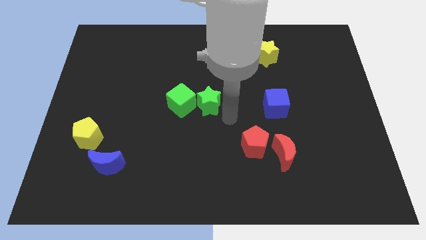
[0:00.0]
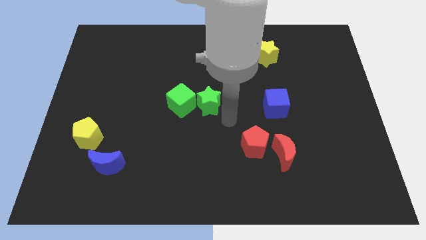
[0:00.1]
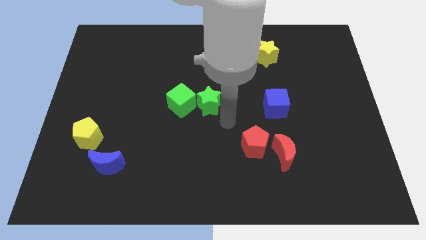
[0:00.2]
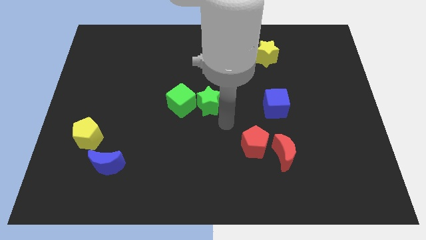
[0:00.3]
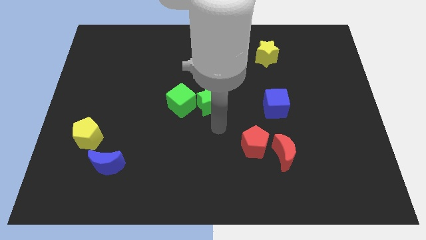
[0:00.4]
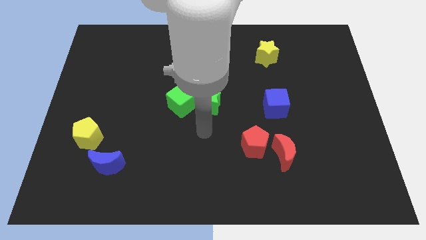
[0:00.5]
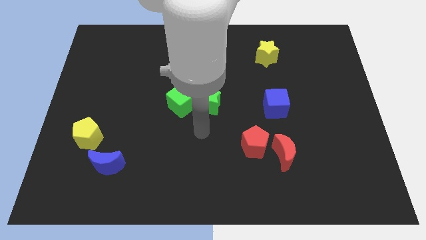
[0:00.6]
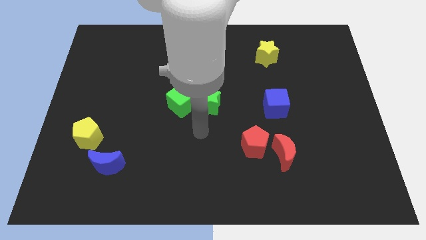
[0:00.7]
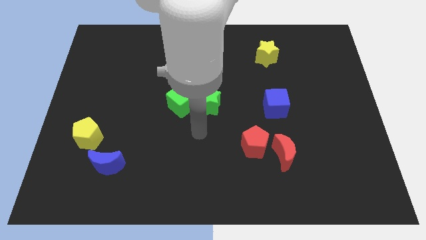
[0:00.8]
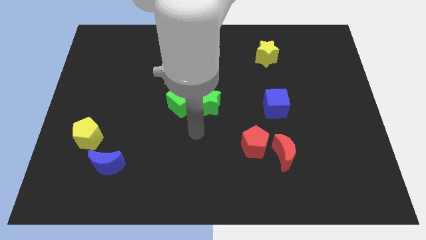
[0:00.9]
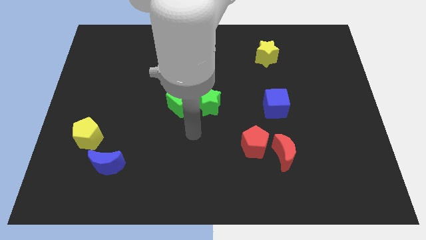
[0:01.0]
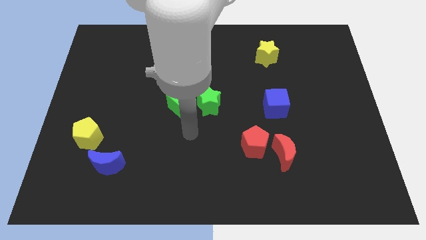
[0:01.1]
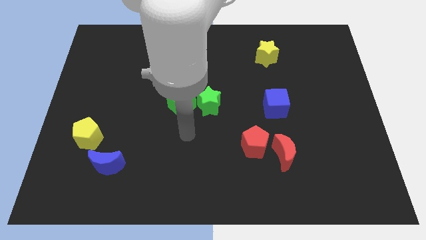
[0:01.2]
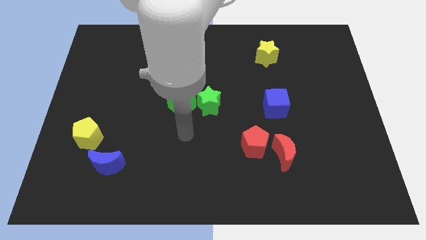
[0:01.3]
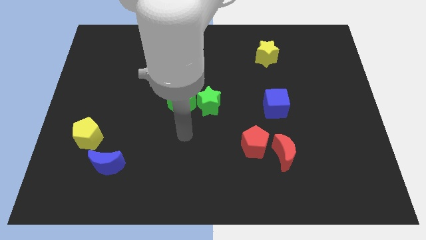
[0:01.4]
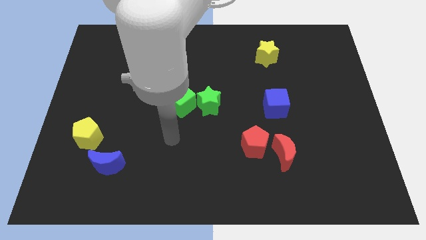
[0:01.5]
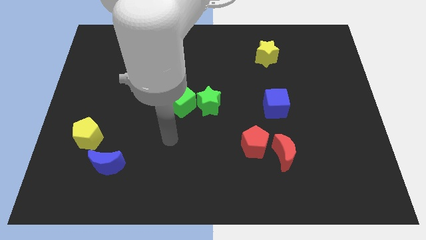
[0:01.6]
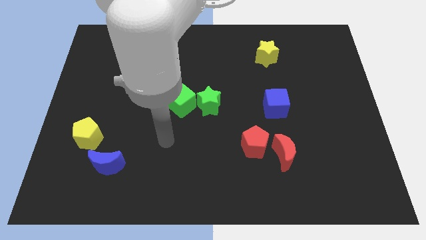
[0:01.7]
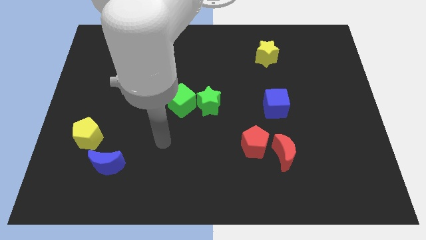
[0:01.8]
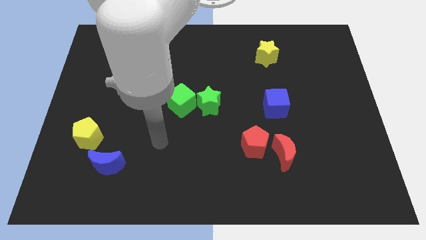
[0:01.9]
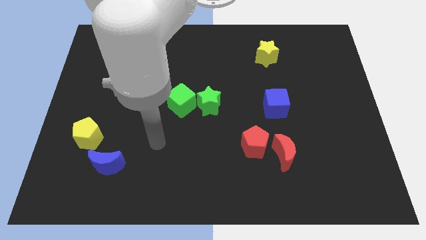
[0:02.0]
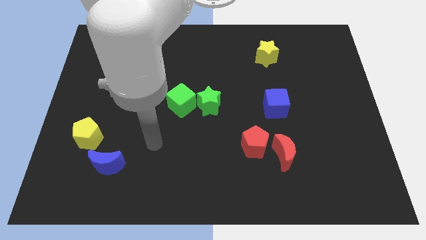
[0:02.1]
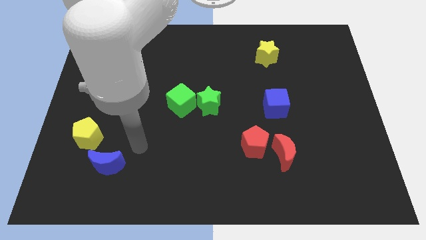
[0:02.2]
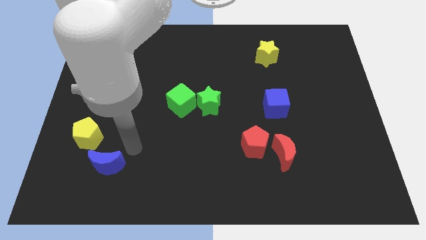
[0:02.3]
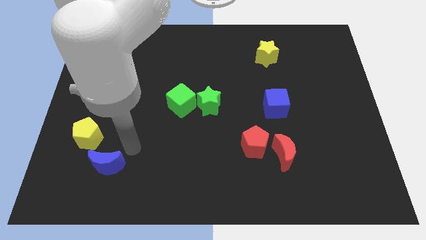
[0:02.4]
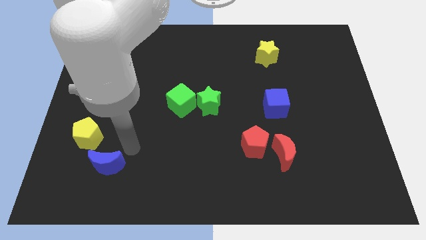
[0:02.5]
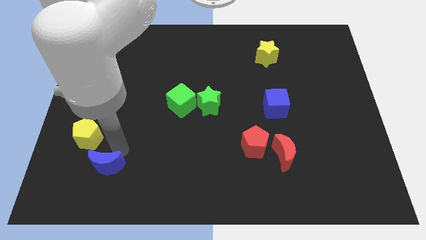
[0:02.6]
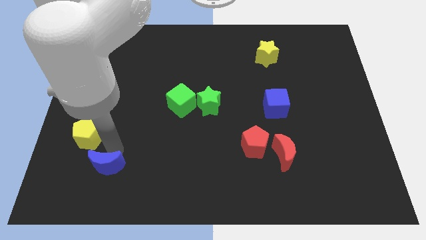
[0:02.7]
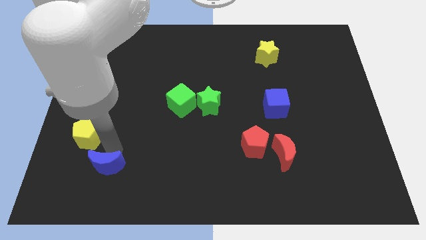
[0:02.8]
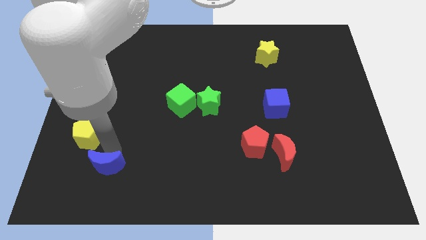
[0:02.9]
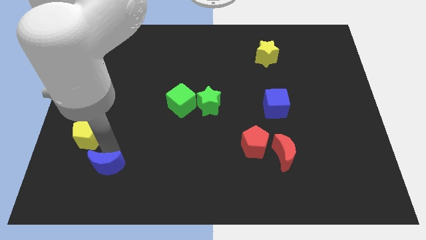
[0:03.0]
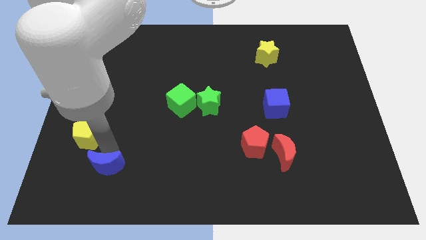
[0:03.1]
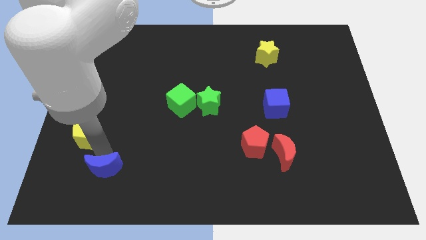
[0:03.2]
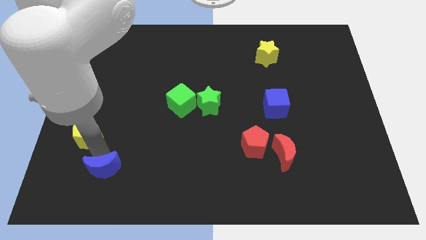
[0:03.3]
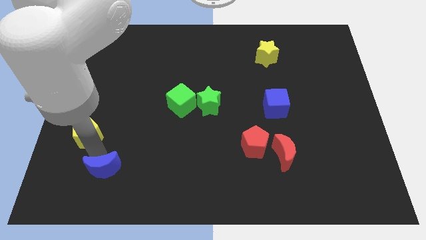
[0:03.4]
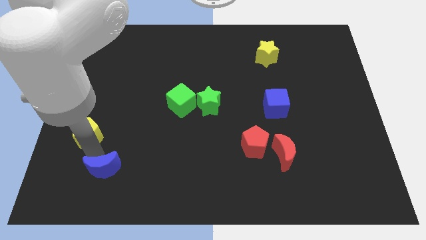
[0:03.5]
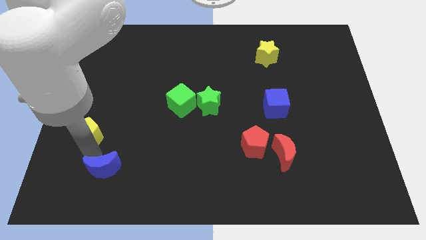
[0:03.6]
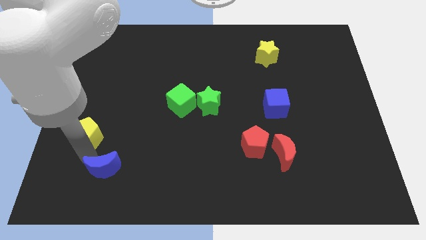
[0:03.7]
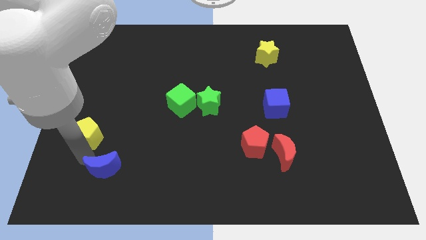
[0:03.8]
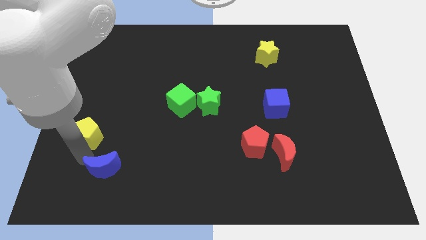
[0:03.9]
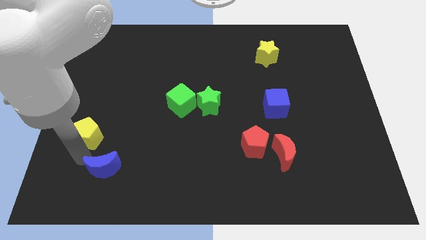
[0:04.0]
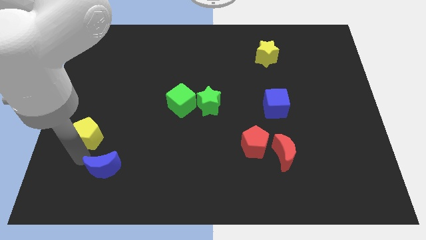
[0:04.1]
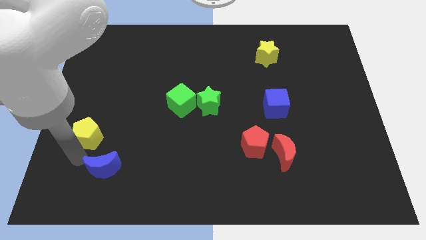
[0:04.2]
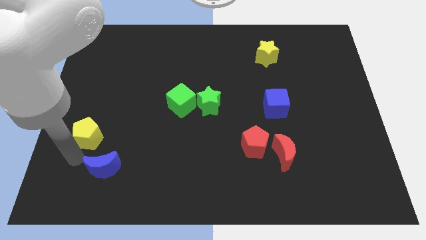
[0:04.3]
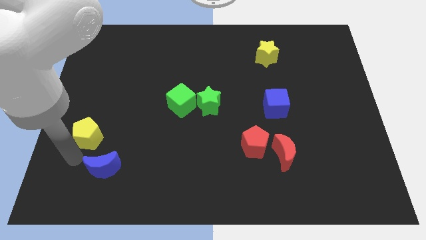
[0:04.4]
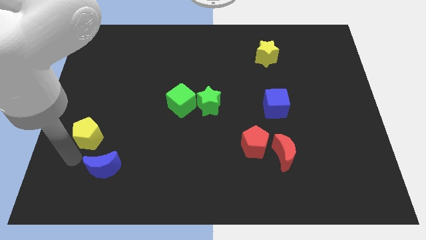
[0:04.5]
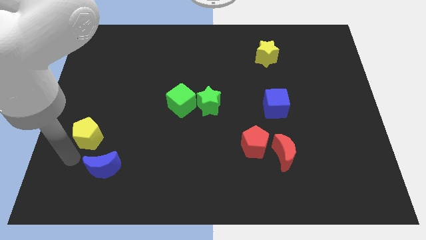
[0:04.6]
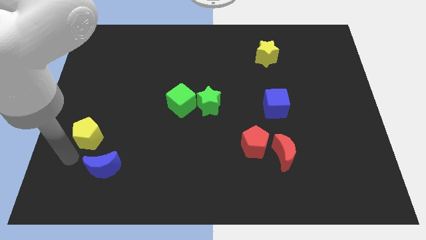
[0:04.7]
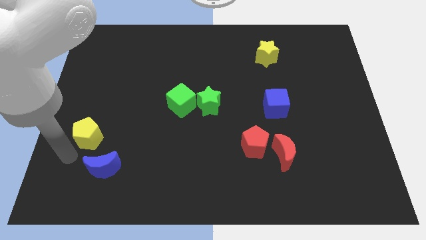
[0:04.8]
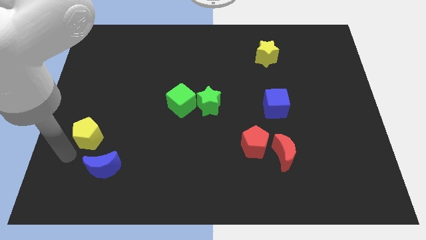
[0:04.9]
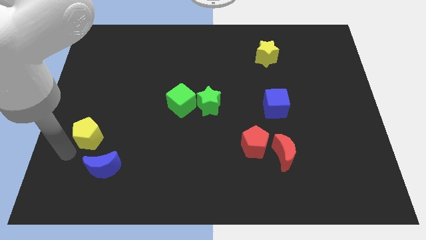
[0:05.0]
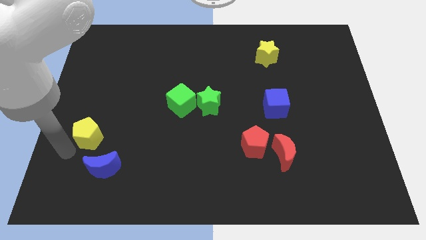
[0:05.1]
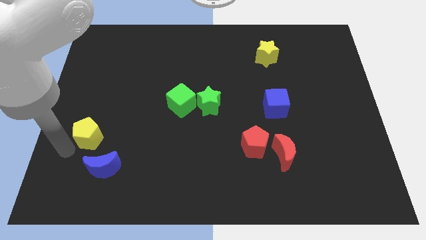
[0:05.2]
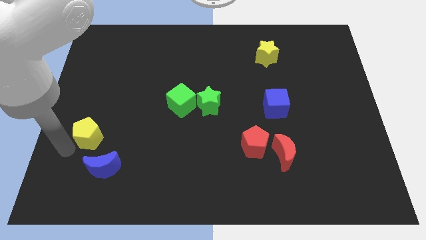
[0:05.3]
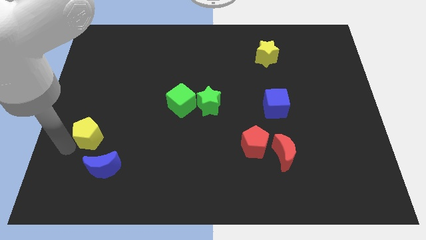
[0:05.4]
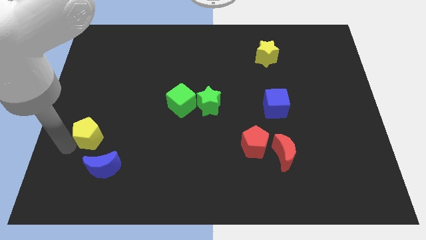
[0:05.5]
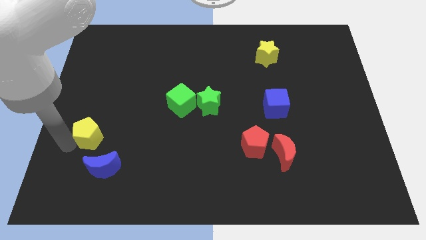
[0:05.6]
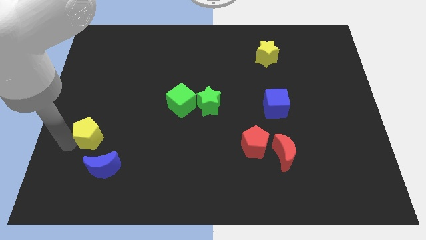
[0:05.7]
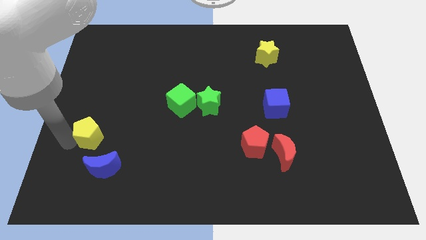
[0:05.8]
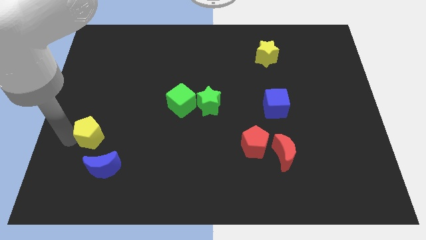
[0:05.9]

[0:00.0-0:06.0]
move the arm to the left of the yellow pentagon

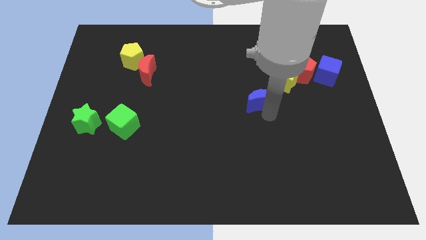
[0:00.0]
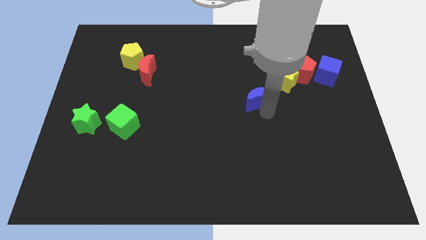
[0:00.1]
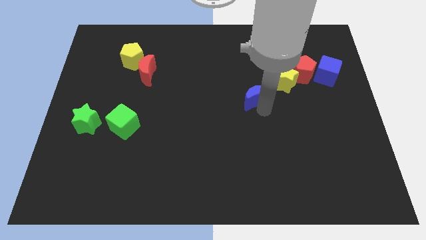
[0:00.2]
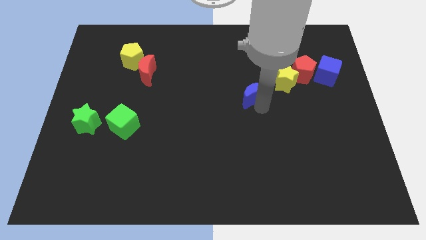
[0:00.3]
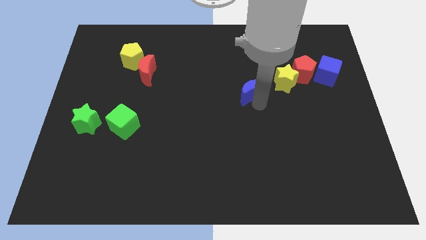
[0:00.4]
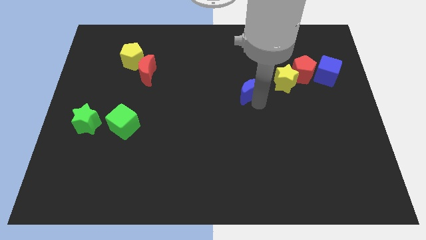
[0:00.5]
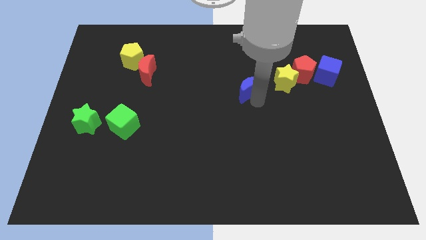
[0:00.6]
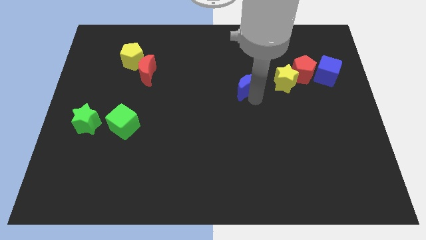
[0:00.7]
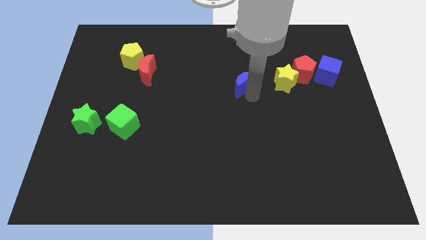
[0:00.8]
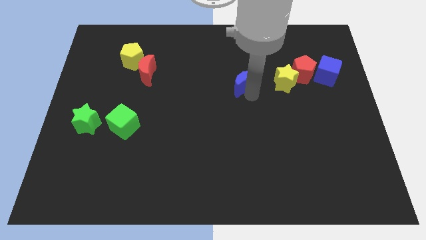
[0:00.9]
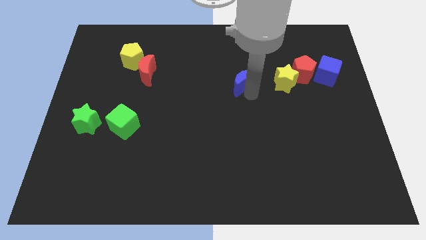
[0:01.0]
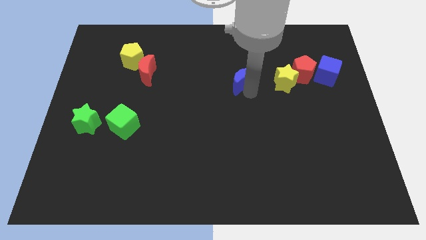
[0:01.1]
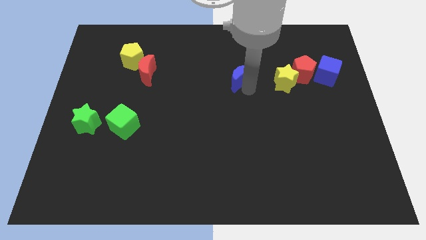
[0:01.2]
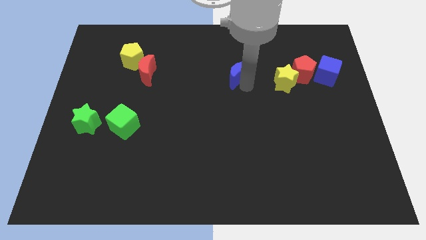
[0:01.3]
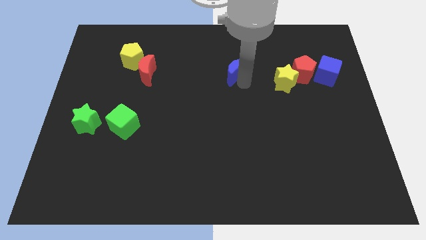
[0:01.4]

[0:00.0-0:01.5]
place the blue moon in between the red moon and yellow star

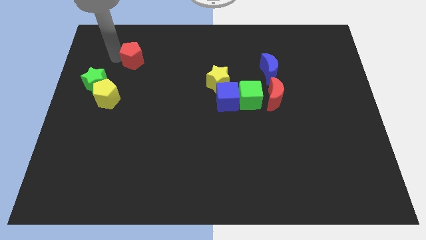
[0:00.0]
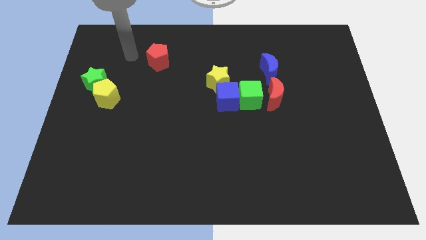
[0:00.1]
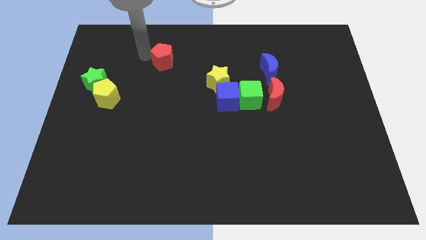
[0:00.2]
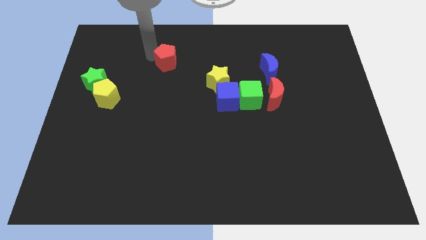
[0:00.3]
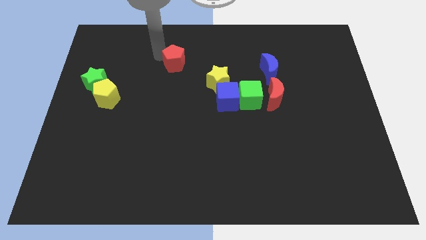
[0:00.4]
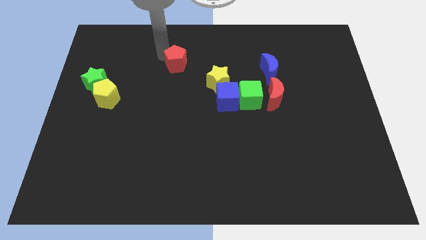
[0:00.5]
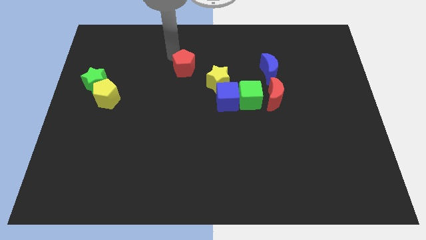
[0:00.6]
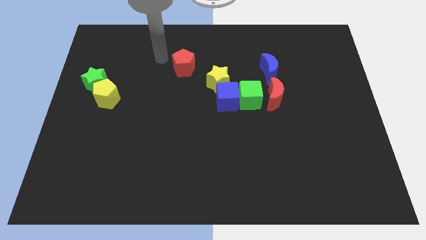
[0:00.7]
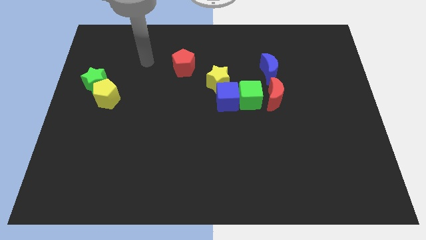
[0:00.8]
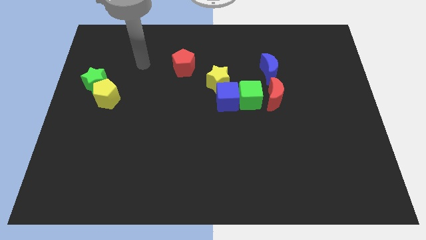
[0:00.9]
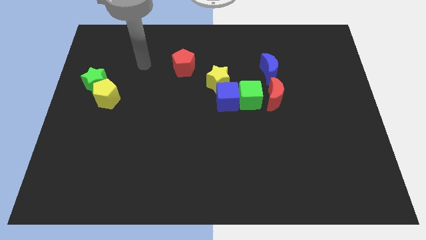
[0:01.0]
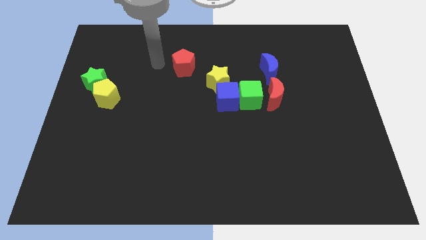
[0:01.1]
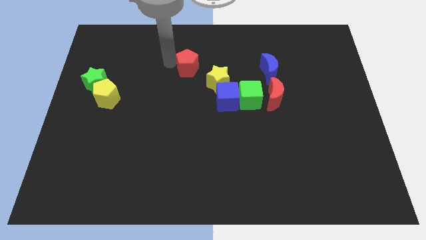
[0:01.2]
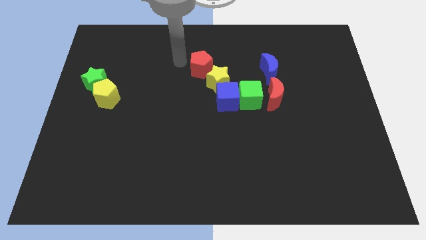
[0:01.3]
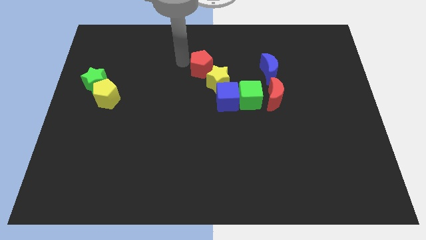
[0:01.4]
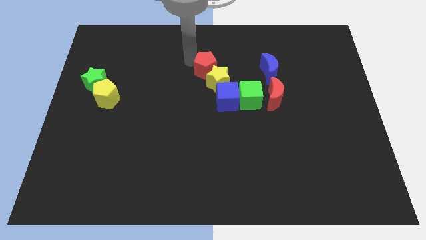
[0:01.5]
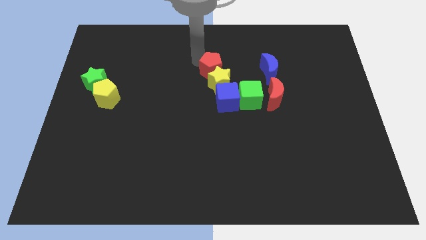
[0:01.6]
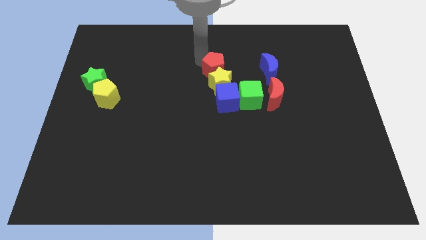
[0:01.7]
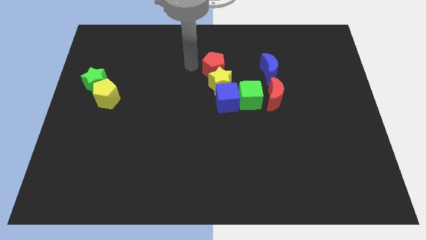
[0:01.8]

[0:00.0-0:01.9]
push the red pentagon into the yellow star
